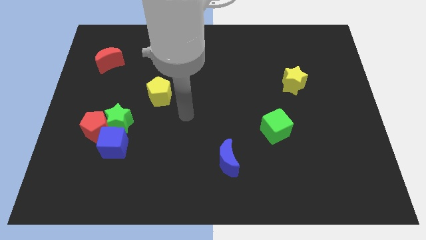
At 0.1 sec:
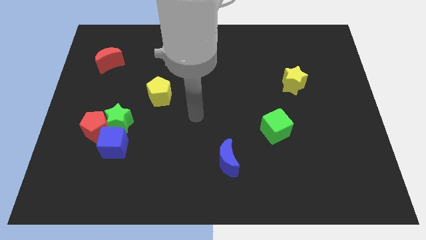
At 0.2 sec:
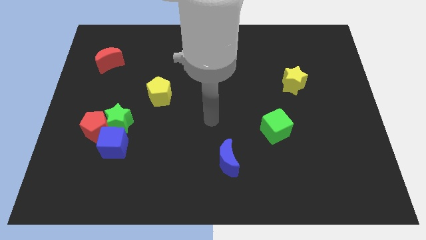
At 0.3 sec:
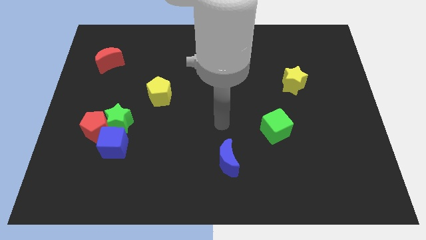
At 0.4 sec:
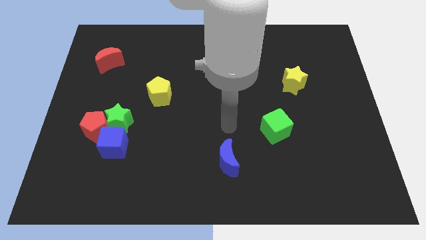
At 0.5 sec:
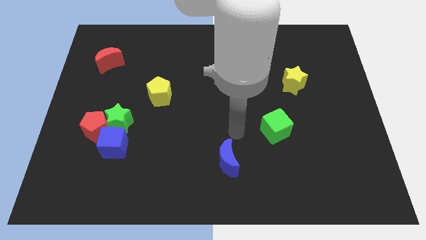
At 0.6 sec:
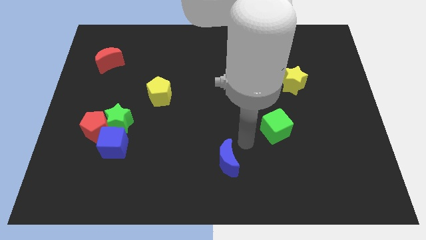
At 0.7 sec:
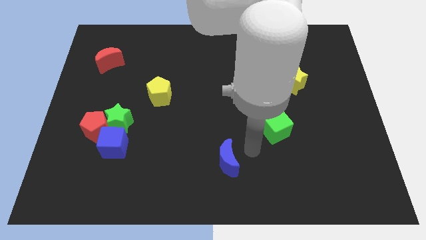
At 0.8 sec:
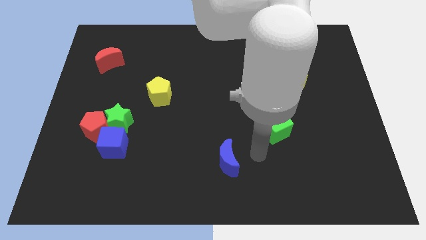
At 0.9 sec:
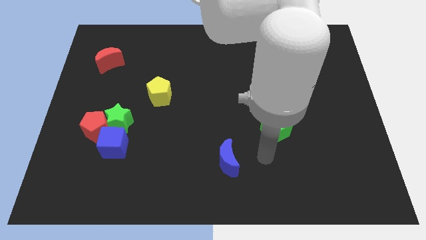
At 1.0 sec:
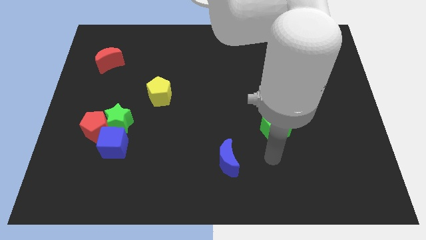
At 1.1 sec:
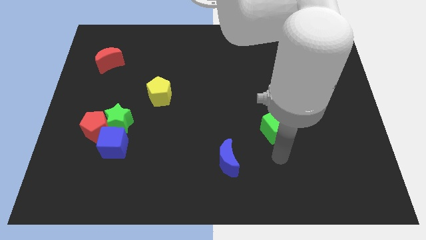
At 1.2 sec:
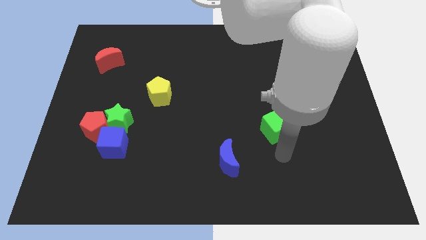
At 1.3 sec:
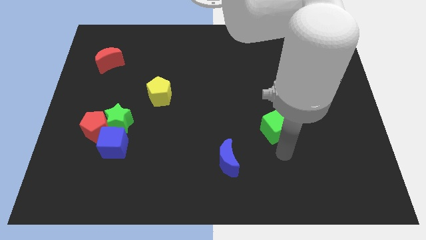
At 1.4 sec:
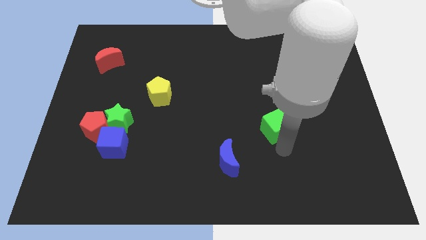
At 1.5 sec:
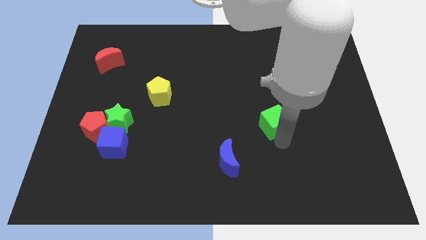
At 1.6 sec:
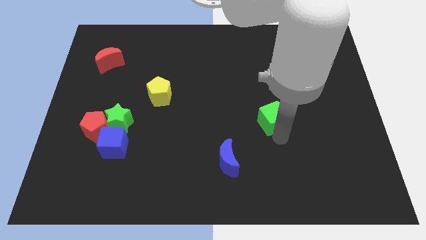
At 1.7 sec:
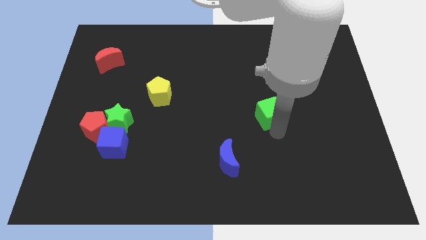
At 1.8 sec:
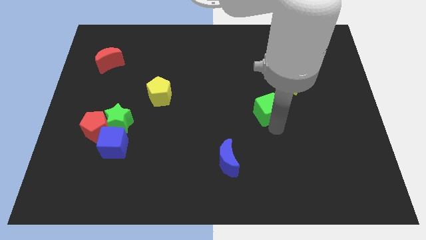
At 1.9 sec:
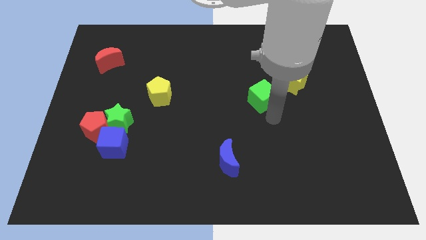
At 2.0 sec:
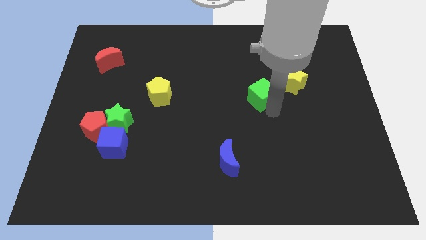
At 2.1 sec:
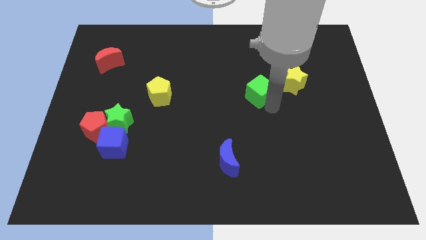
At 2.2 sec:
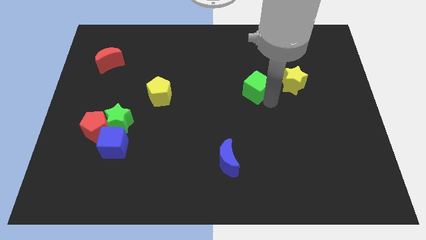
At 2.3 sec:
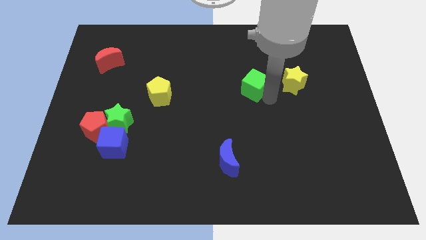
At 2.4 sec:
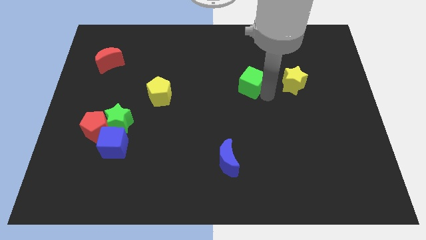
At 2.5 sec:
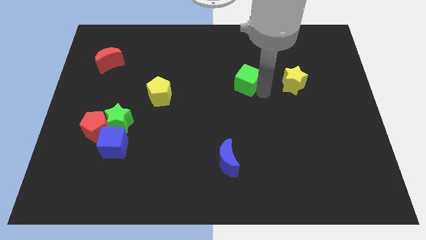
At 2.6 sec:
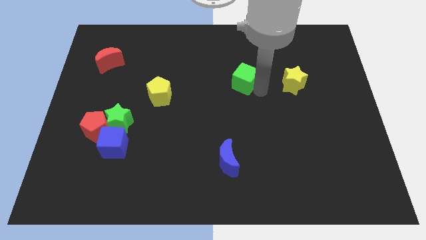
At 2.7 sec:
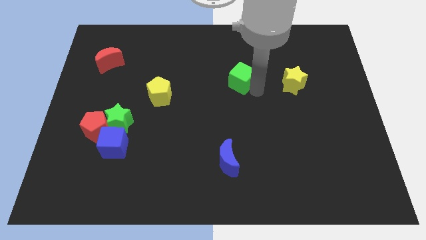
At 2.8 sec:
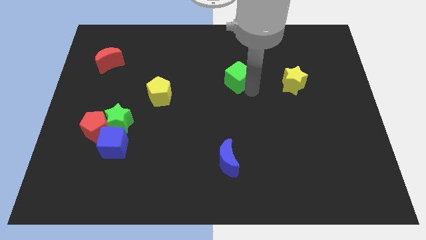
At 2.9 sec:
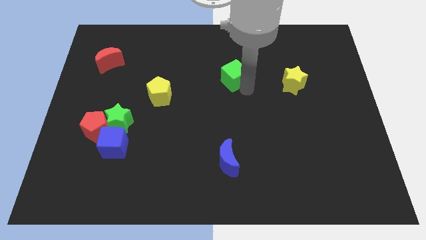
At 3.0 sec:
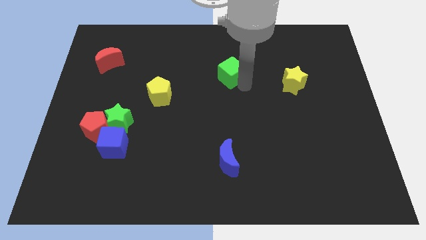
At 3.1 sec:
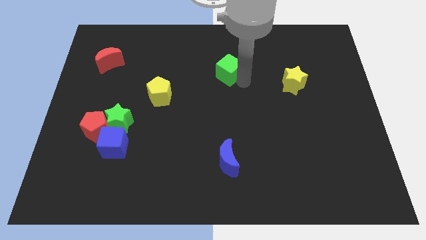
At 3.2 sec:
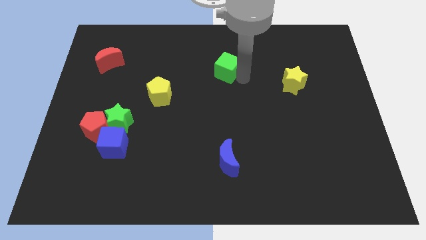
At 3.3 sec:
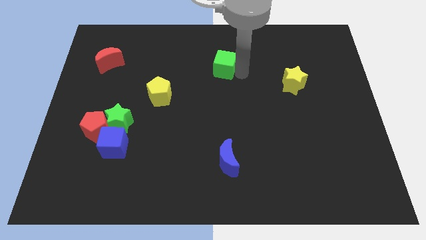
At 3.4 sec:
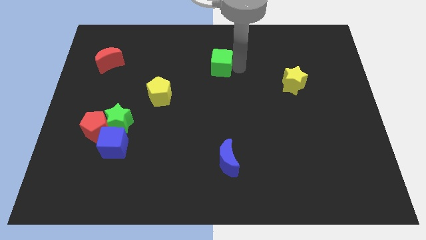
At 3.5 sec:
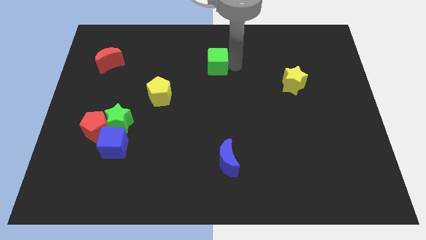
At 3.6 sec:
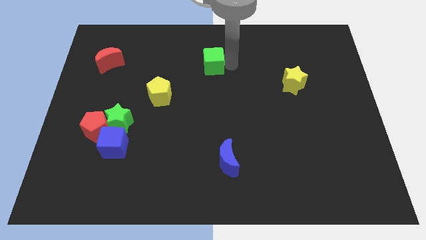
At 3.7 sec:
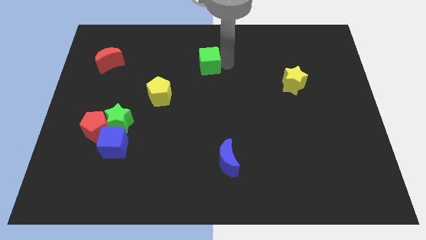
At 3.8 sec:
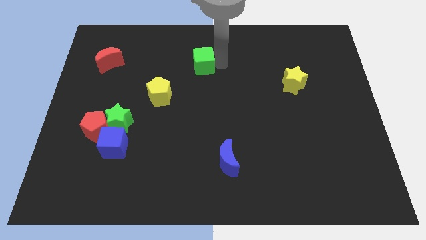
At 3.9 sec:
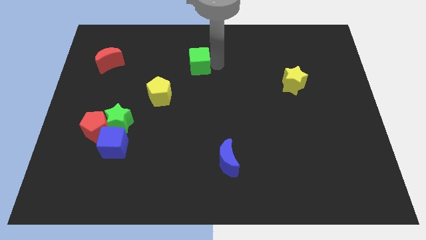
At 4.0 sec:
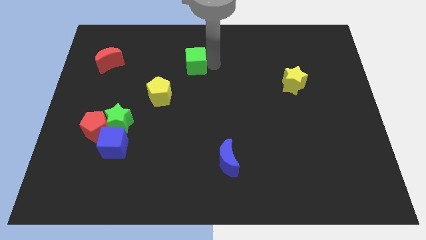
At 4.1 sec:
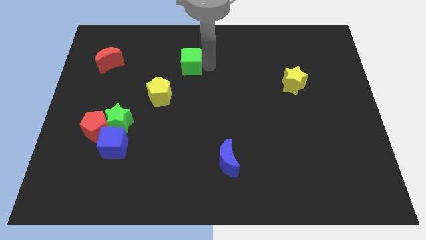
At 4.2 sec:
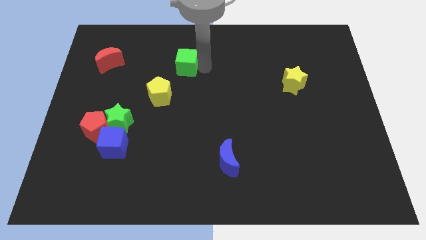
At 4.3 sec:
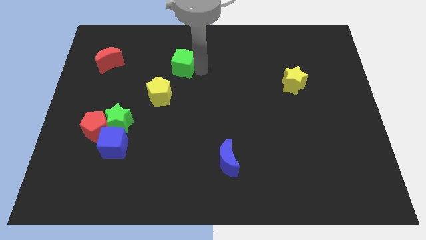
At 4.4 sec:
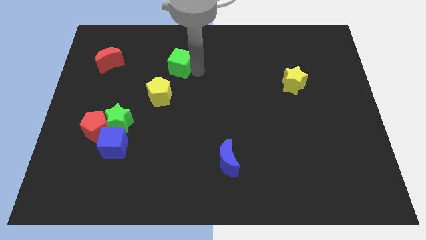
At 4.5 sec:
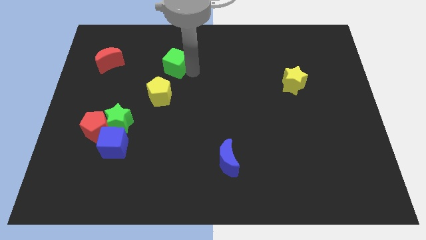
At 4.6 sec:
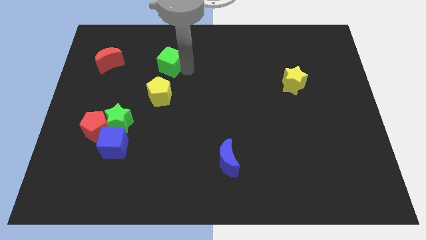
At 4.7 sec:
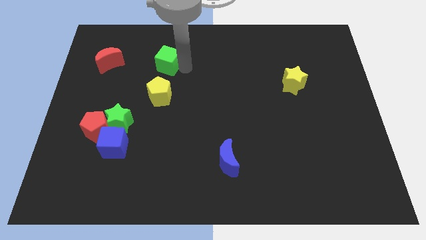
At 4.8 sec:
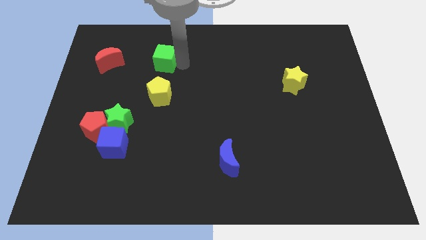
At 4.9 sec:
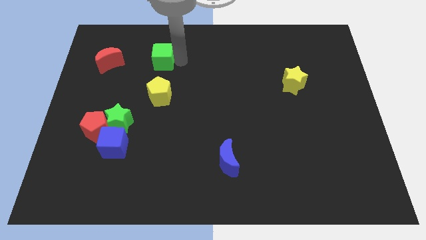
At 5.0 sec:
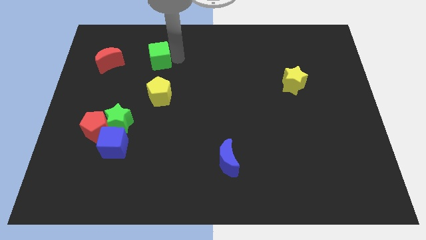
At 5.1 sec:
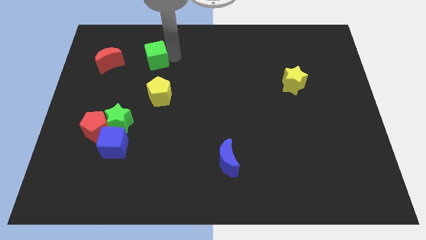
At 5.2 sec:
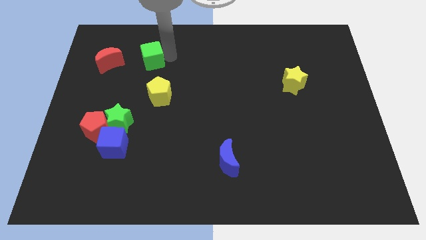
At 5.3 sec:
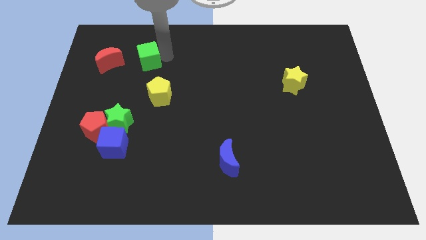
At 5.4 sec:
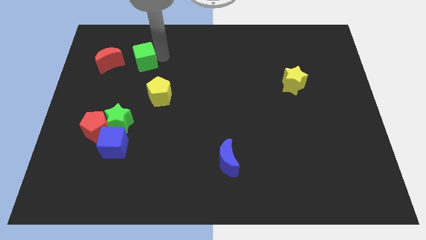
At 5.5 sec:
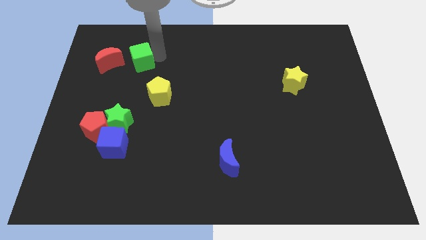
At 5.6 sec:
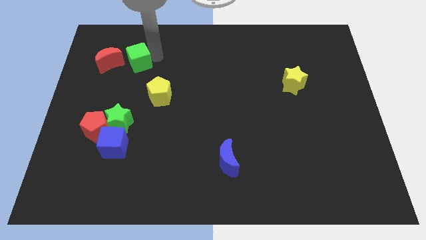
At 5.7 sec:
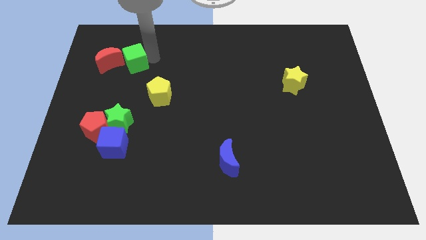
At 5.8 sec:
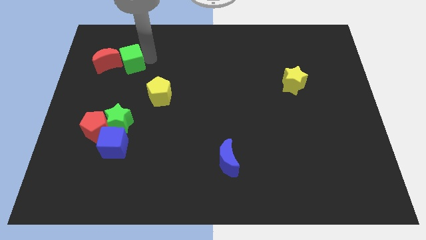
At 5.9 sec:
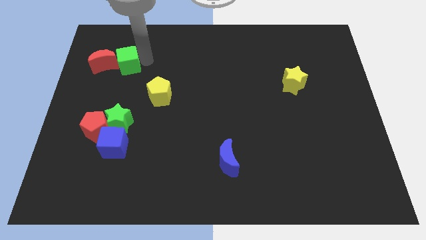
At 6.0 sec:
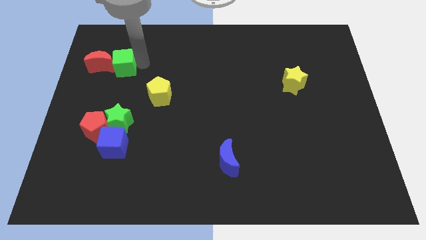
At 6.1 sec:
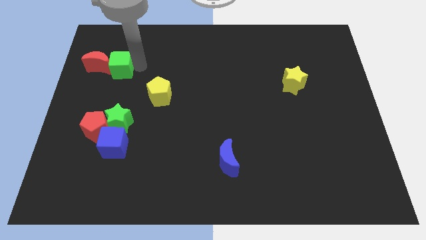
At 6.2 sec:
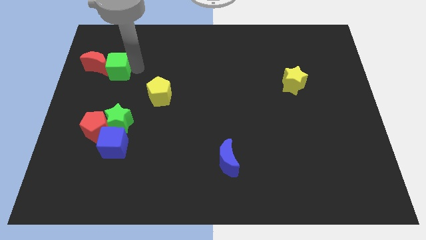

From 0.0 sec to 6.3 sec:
push the green cube towards the red moon

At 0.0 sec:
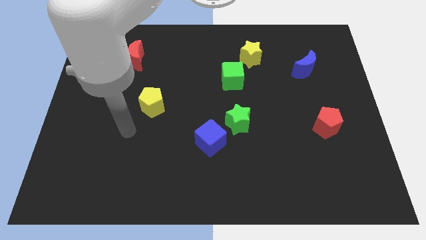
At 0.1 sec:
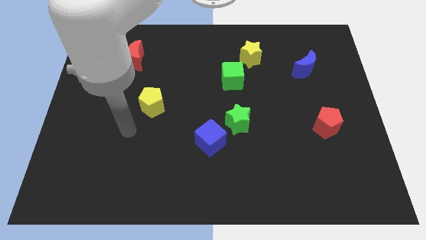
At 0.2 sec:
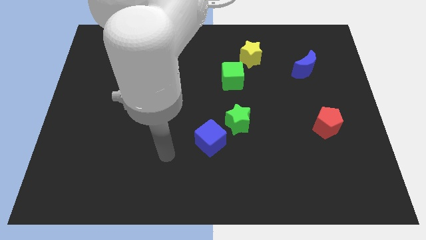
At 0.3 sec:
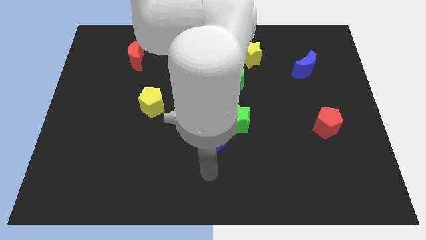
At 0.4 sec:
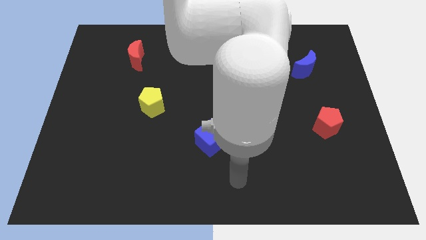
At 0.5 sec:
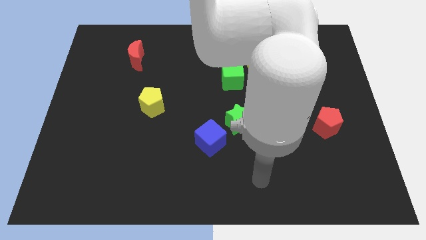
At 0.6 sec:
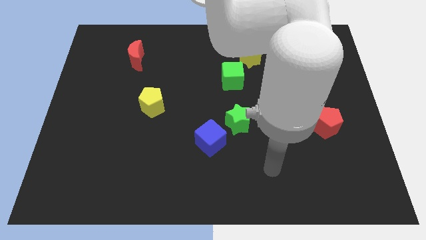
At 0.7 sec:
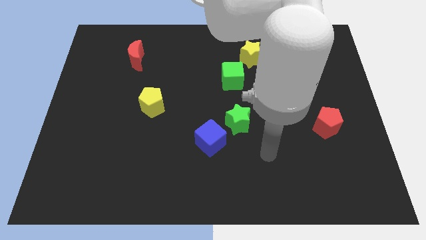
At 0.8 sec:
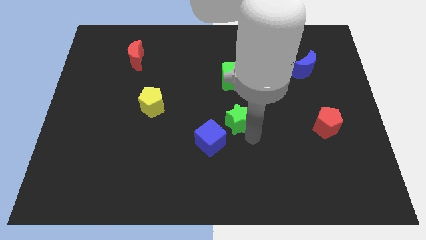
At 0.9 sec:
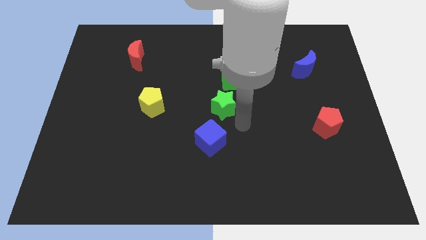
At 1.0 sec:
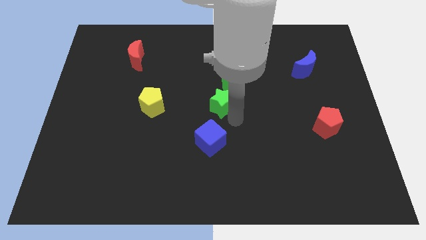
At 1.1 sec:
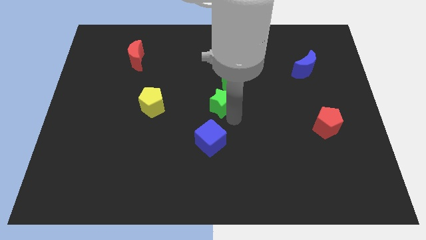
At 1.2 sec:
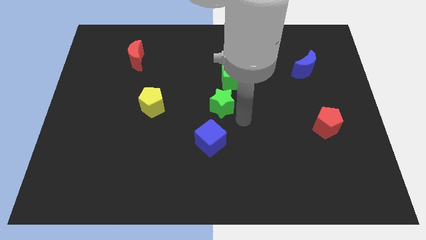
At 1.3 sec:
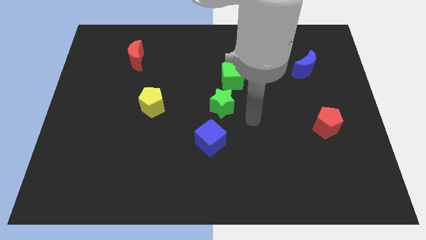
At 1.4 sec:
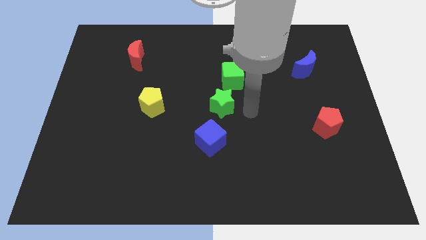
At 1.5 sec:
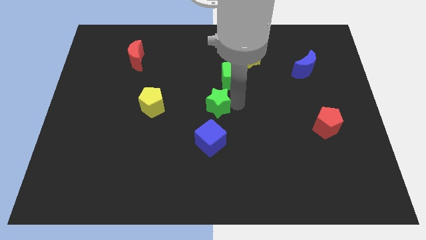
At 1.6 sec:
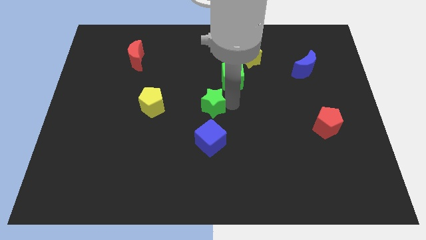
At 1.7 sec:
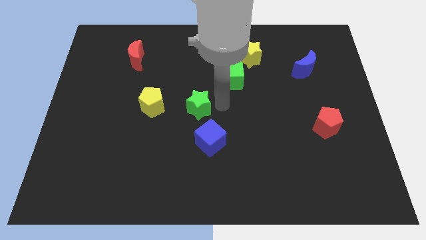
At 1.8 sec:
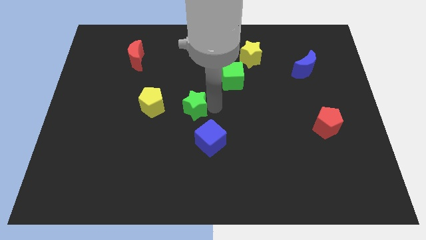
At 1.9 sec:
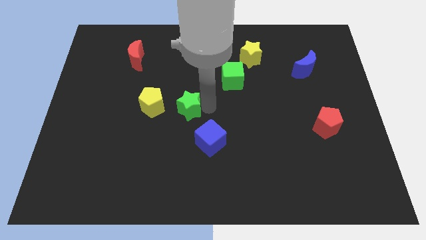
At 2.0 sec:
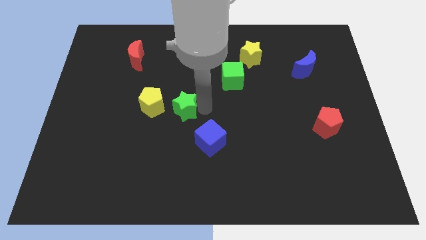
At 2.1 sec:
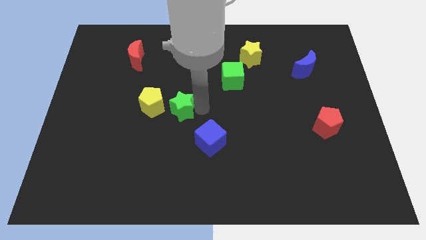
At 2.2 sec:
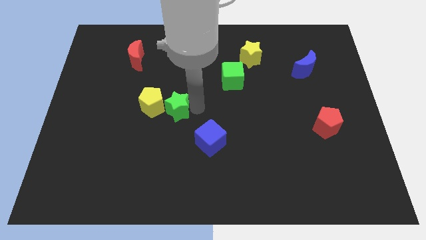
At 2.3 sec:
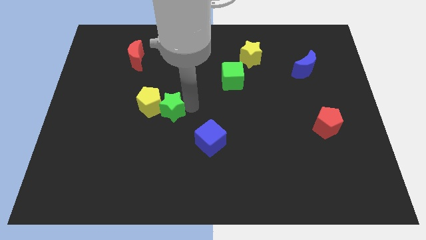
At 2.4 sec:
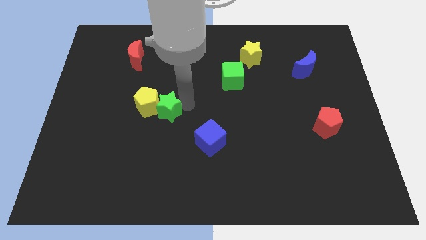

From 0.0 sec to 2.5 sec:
slide the green star next to the yellow pentagon
